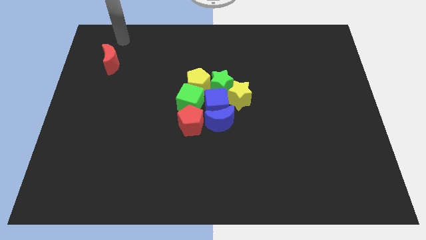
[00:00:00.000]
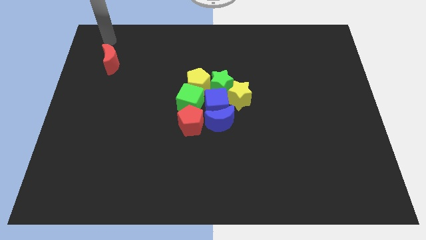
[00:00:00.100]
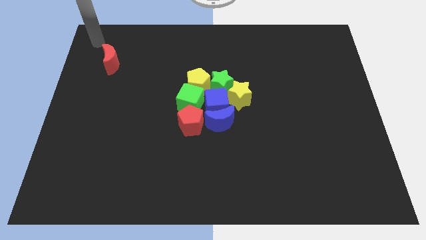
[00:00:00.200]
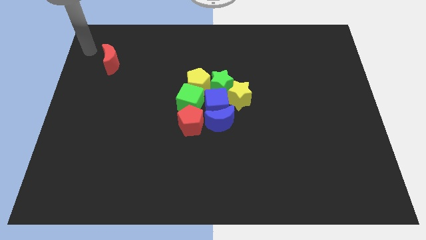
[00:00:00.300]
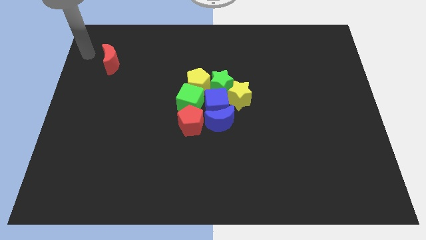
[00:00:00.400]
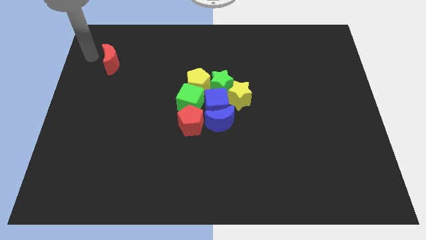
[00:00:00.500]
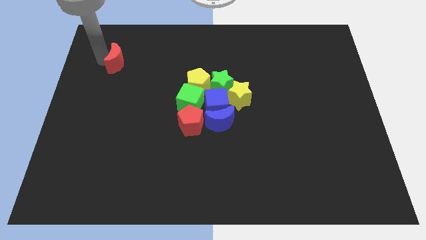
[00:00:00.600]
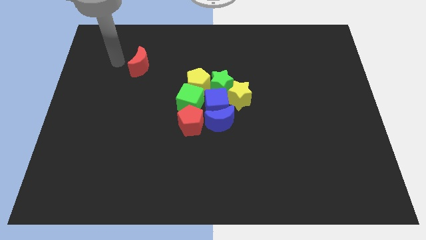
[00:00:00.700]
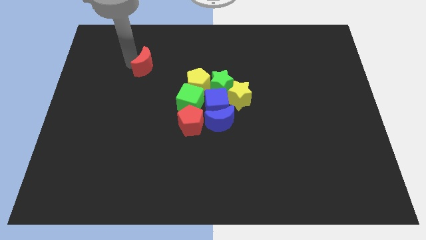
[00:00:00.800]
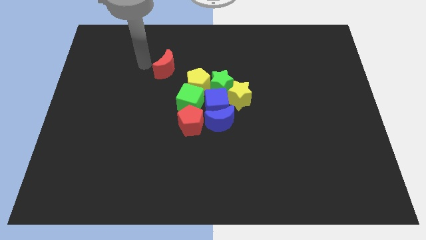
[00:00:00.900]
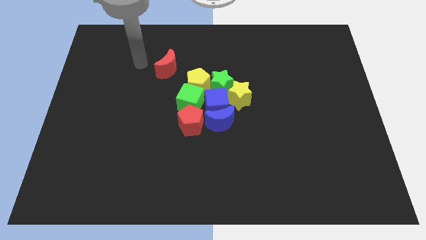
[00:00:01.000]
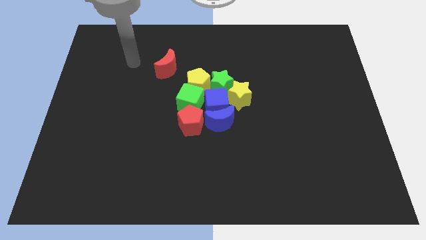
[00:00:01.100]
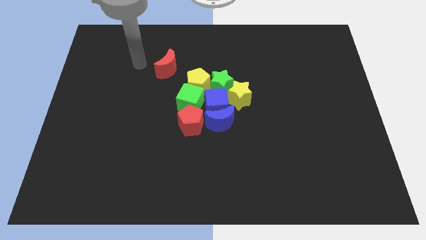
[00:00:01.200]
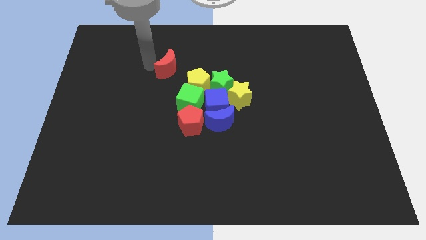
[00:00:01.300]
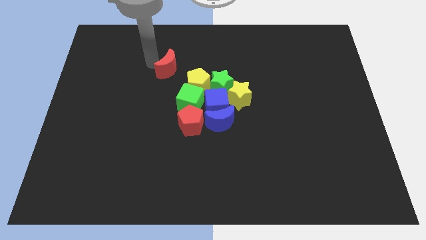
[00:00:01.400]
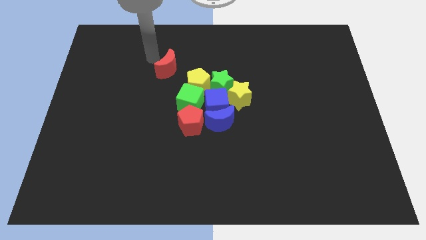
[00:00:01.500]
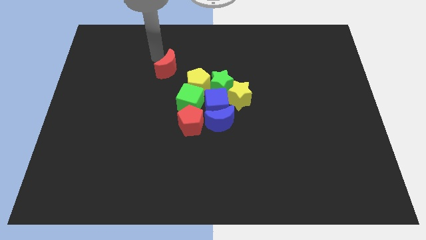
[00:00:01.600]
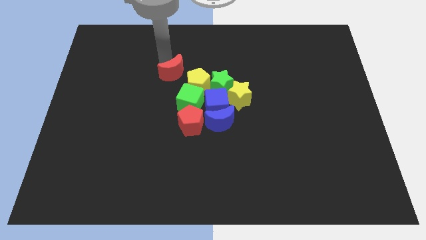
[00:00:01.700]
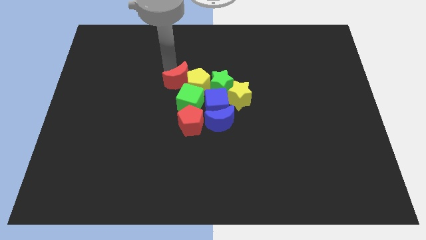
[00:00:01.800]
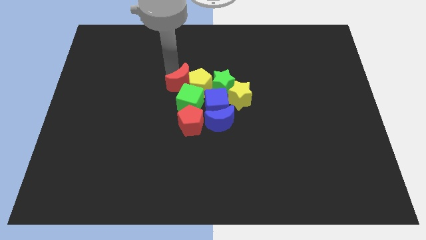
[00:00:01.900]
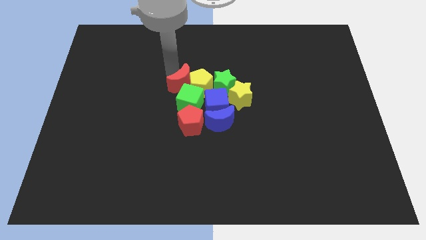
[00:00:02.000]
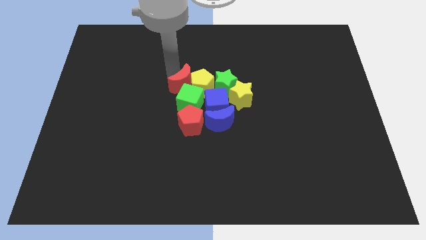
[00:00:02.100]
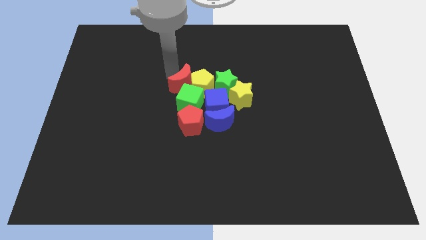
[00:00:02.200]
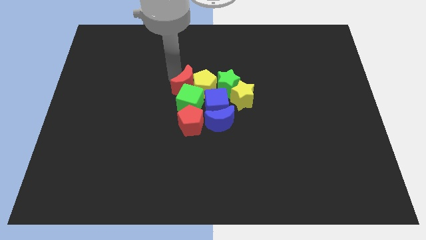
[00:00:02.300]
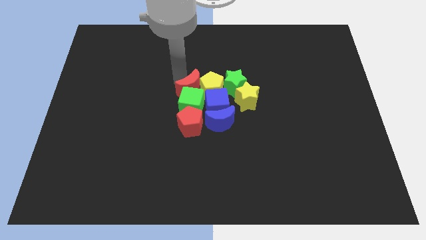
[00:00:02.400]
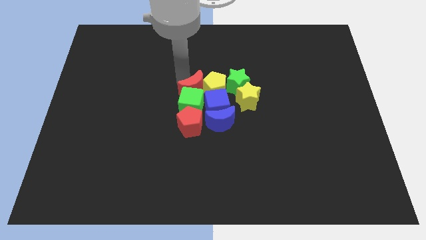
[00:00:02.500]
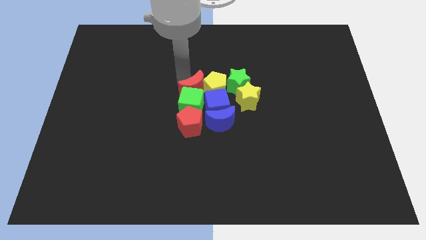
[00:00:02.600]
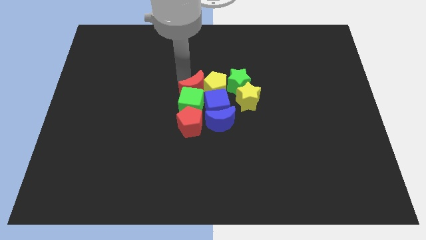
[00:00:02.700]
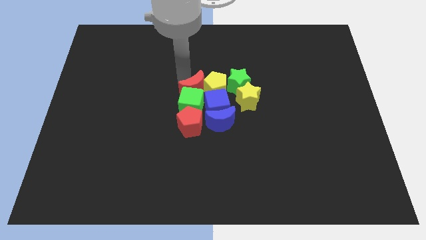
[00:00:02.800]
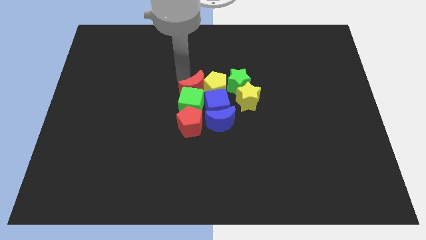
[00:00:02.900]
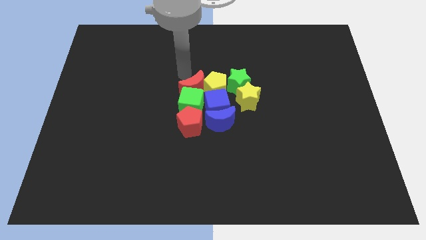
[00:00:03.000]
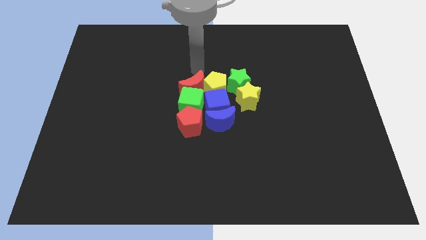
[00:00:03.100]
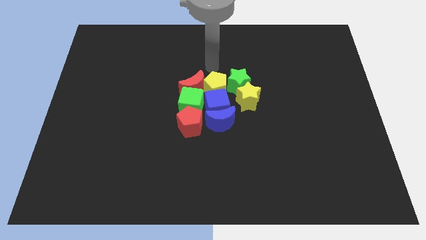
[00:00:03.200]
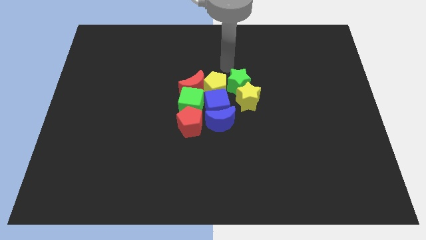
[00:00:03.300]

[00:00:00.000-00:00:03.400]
push the red moon into the green square and yellow pentagon

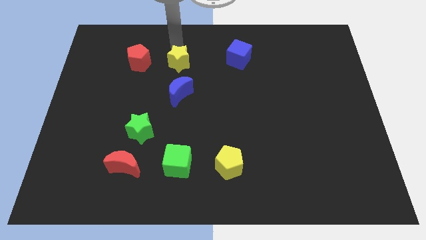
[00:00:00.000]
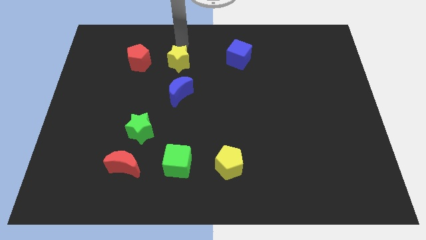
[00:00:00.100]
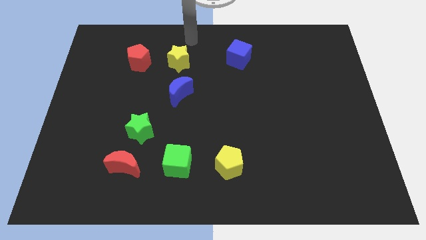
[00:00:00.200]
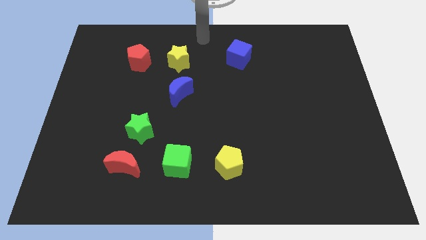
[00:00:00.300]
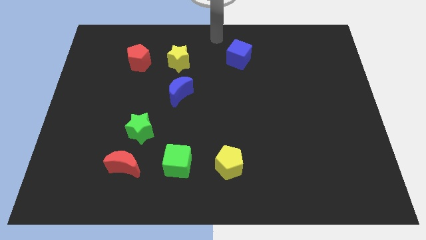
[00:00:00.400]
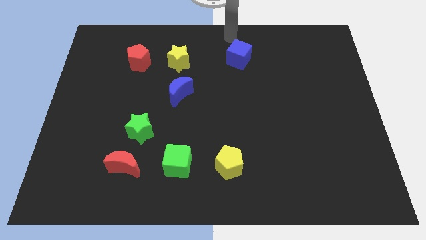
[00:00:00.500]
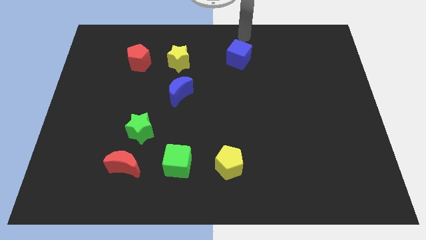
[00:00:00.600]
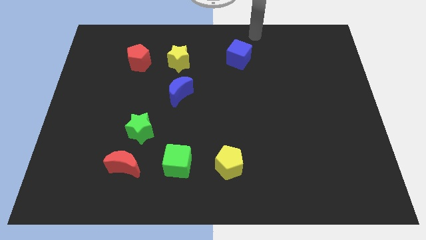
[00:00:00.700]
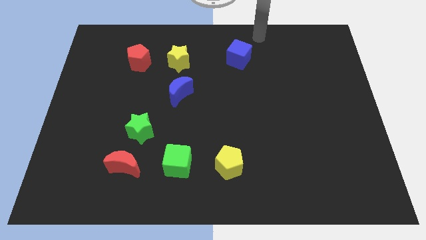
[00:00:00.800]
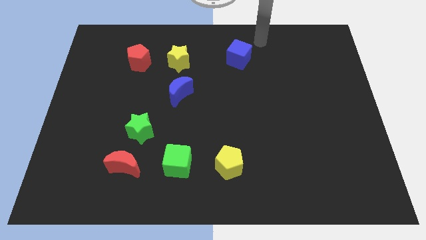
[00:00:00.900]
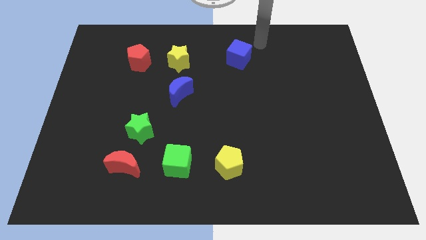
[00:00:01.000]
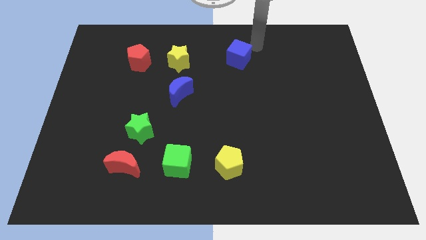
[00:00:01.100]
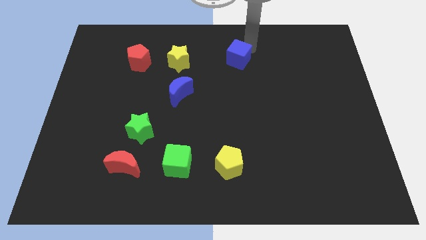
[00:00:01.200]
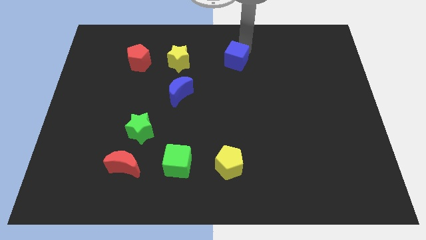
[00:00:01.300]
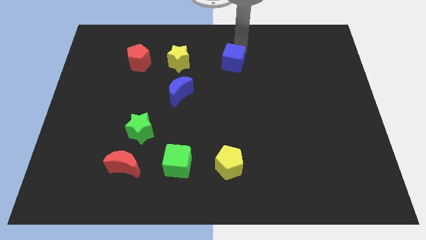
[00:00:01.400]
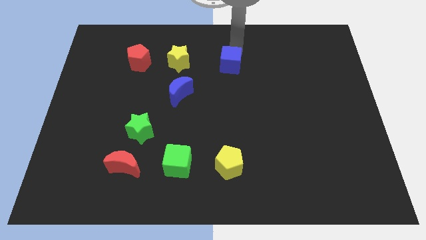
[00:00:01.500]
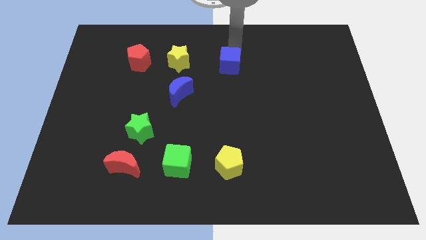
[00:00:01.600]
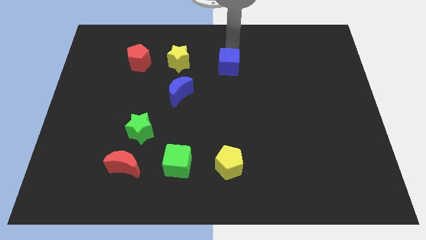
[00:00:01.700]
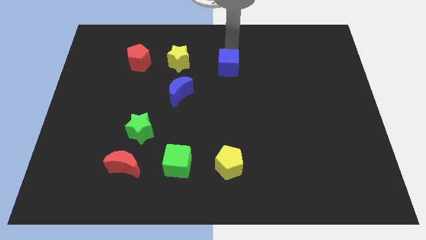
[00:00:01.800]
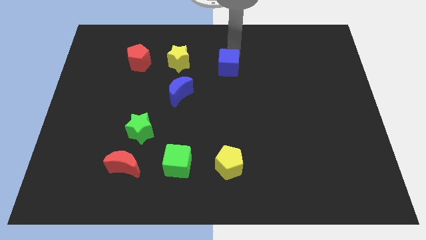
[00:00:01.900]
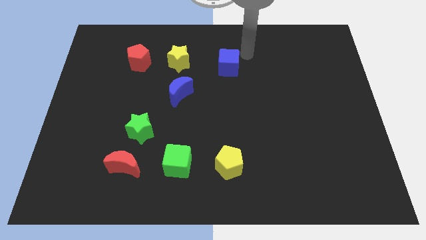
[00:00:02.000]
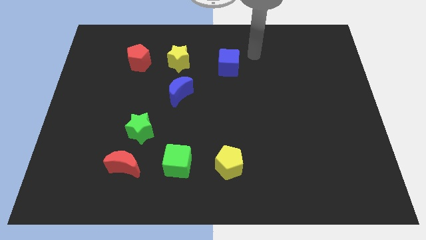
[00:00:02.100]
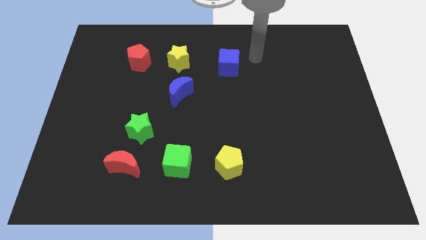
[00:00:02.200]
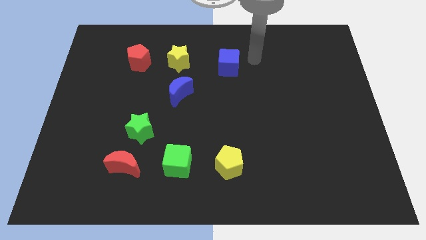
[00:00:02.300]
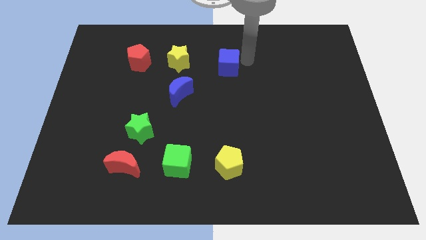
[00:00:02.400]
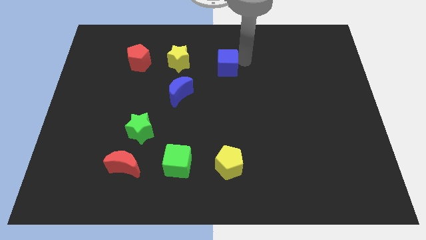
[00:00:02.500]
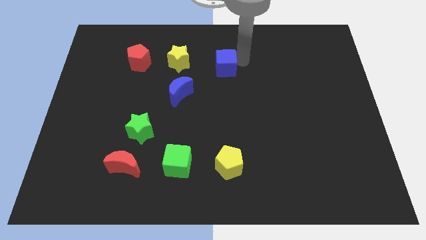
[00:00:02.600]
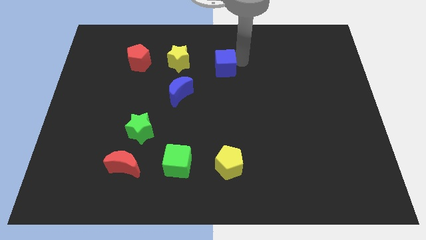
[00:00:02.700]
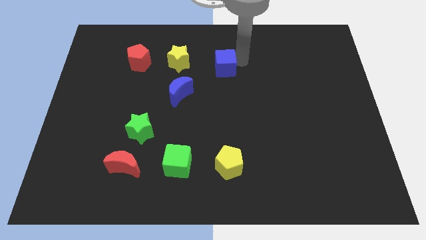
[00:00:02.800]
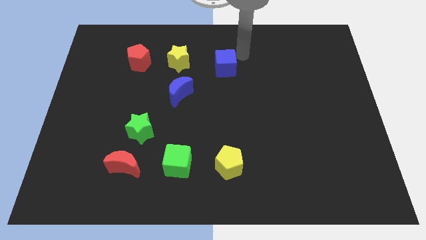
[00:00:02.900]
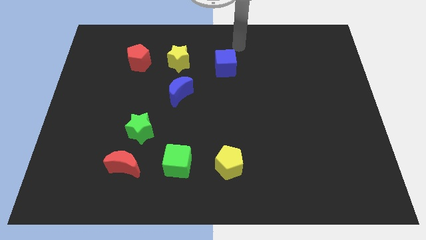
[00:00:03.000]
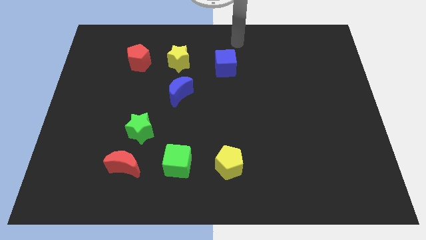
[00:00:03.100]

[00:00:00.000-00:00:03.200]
slightly push the blue cube towards the blue moon

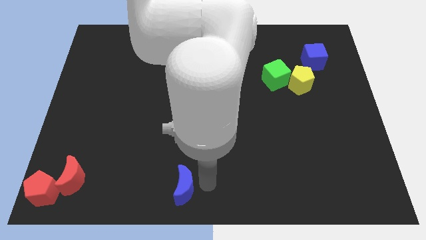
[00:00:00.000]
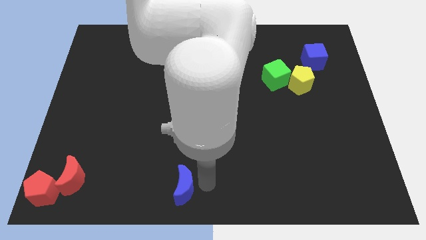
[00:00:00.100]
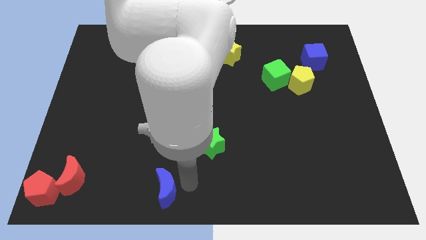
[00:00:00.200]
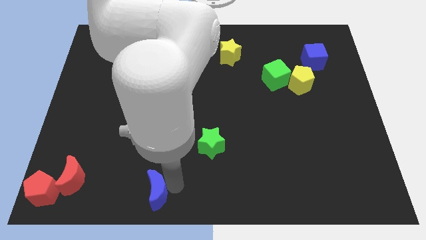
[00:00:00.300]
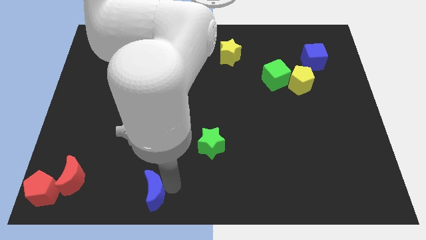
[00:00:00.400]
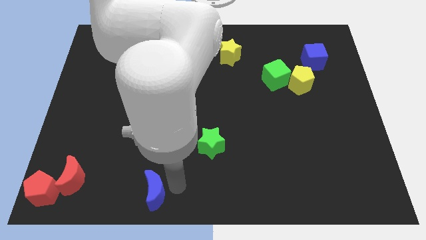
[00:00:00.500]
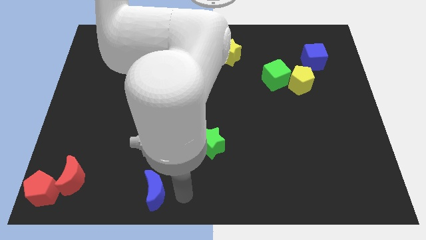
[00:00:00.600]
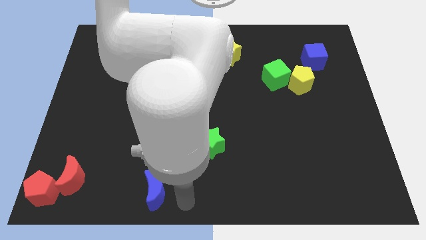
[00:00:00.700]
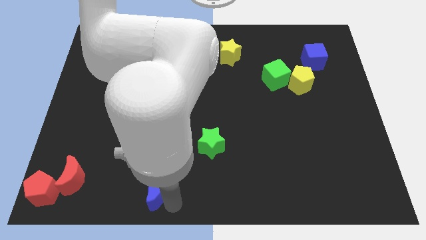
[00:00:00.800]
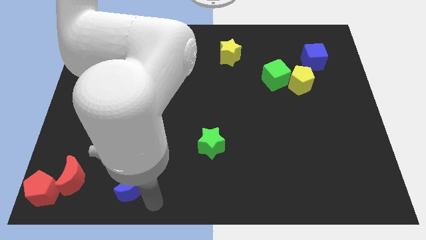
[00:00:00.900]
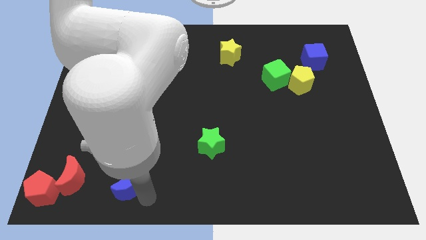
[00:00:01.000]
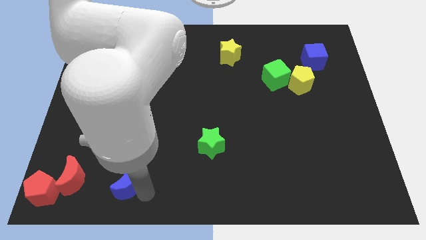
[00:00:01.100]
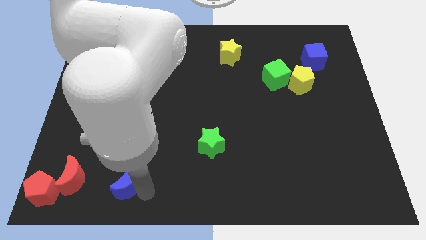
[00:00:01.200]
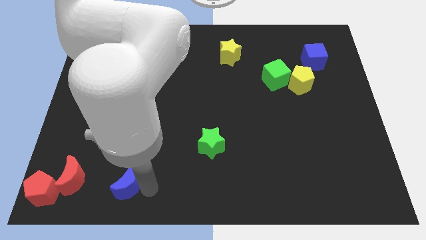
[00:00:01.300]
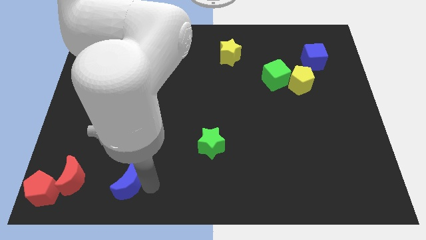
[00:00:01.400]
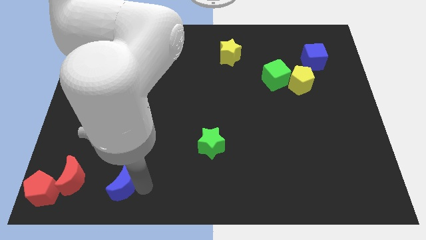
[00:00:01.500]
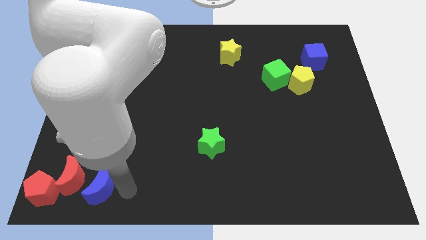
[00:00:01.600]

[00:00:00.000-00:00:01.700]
push blue crescent towards the red crescent

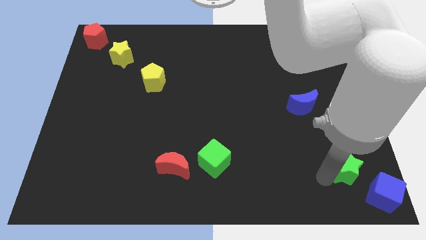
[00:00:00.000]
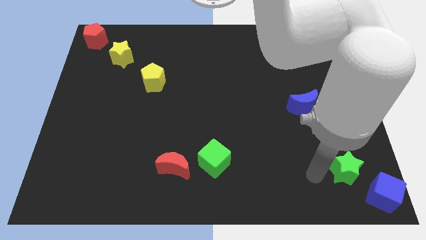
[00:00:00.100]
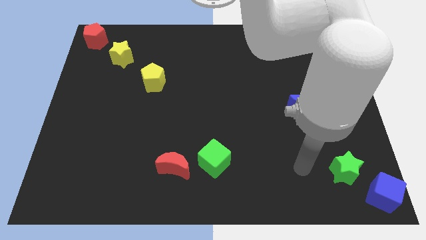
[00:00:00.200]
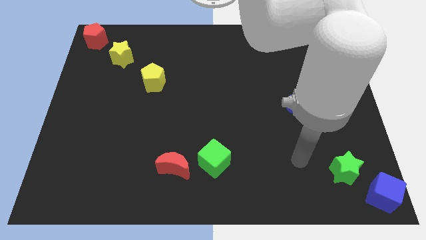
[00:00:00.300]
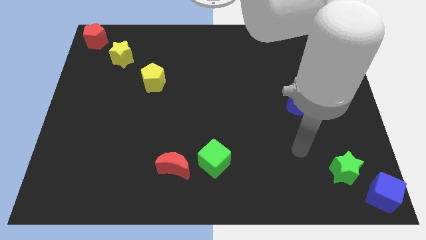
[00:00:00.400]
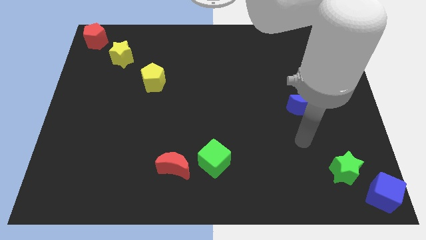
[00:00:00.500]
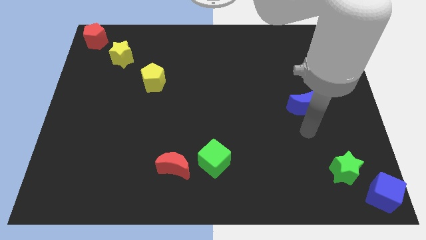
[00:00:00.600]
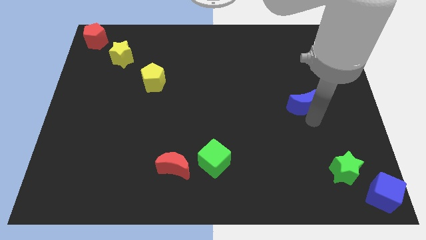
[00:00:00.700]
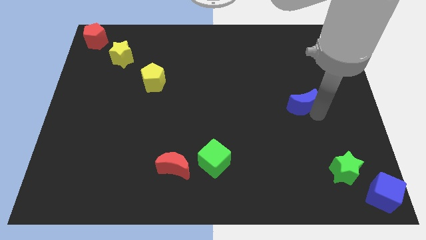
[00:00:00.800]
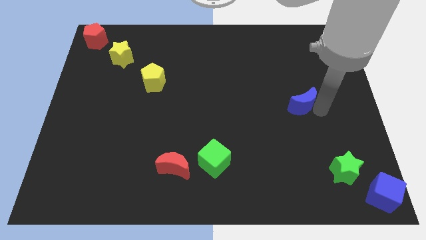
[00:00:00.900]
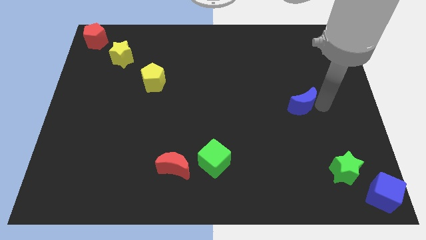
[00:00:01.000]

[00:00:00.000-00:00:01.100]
move your arm away from the green star
